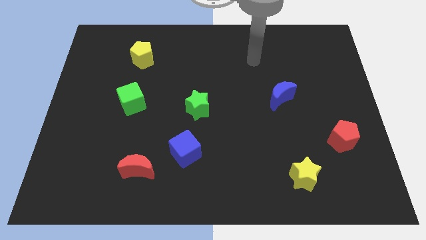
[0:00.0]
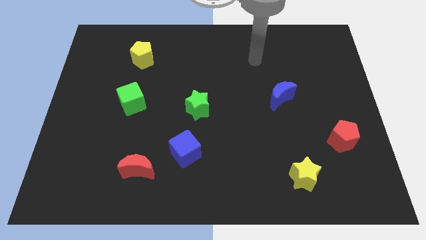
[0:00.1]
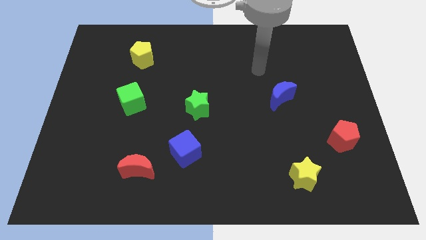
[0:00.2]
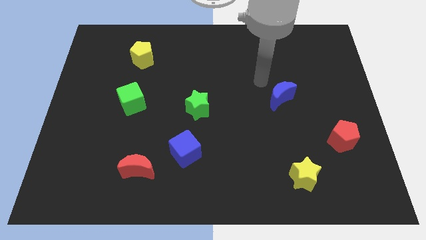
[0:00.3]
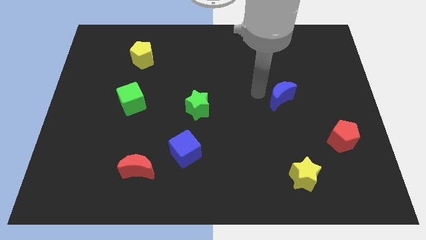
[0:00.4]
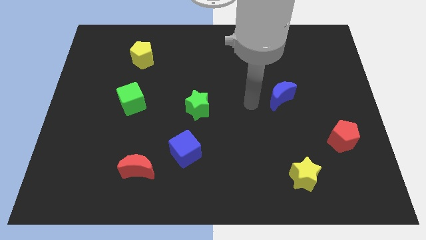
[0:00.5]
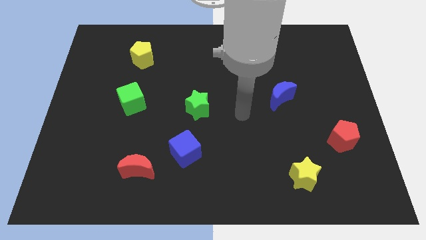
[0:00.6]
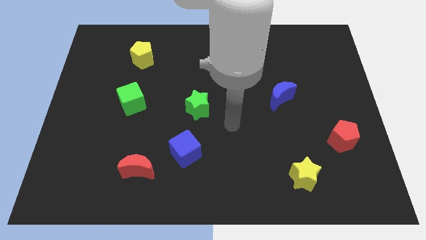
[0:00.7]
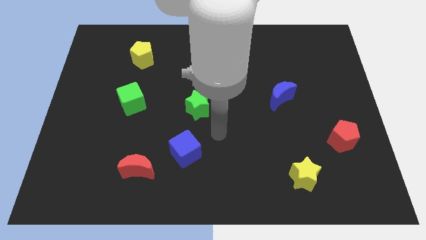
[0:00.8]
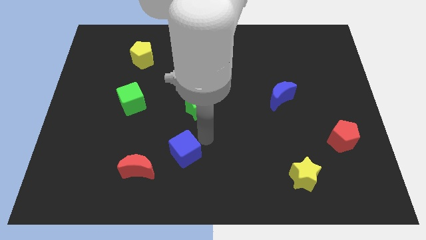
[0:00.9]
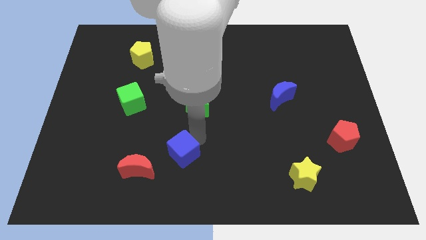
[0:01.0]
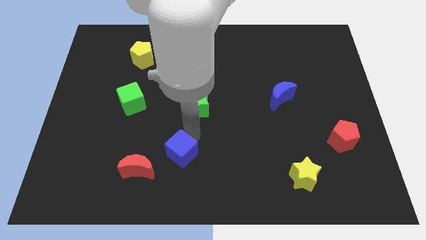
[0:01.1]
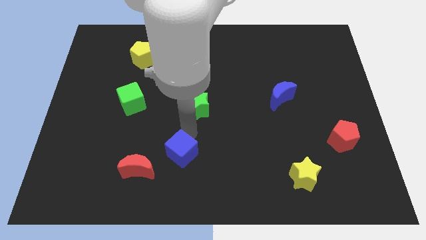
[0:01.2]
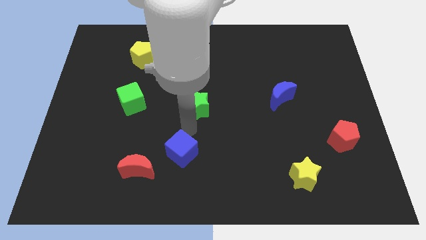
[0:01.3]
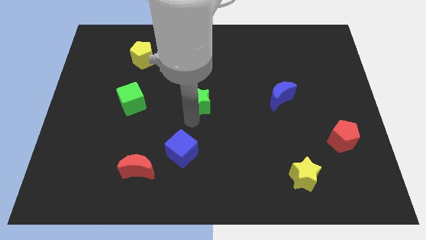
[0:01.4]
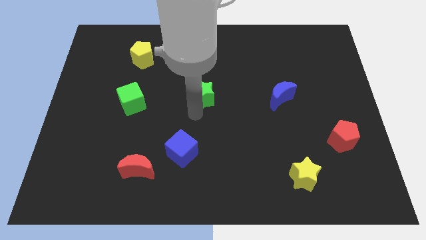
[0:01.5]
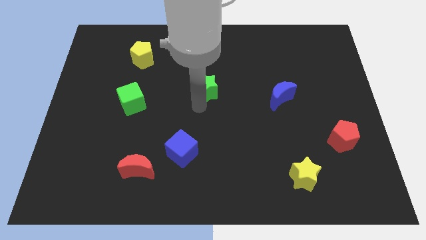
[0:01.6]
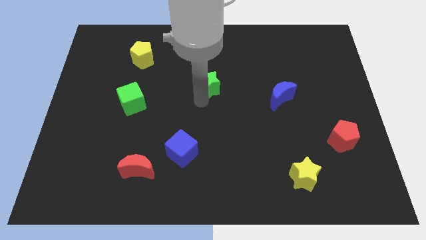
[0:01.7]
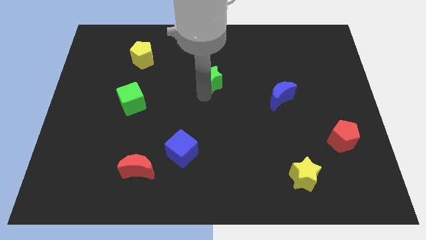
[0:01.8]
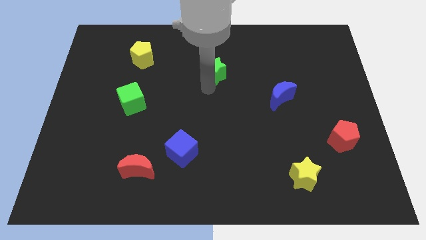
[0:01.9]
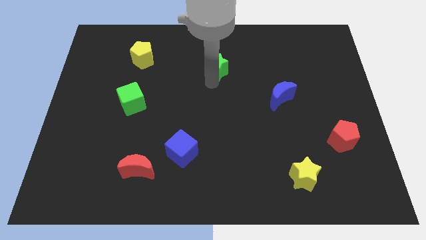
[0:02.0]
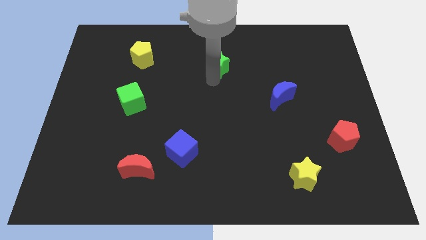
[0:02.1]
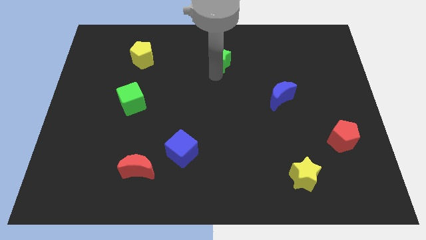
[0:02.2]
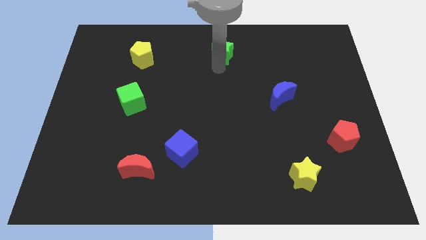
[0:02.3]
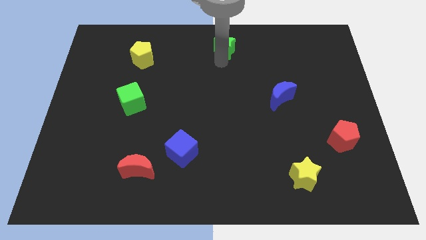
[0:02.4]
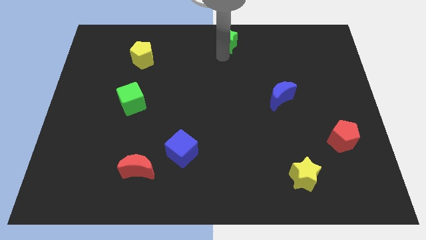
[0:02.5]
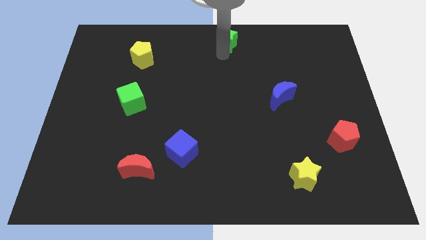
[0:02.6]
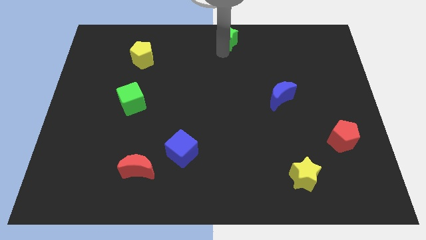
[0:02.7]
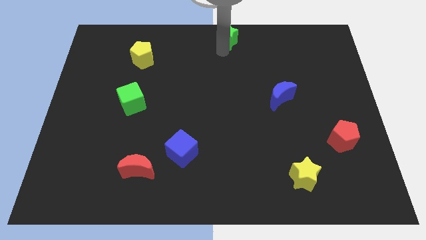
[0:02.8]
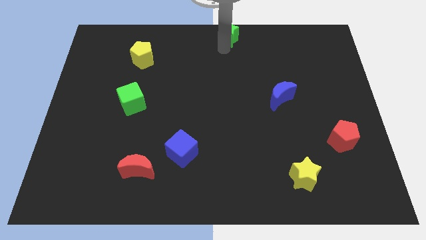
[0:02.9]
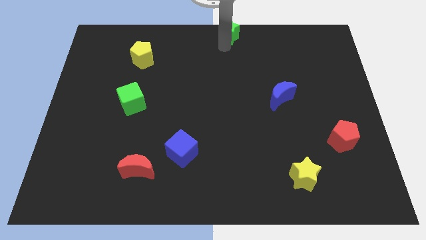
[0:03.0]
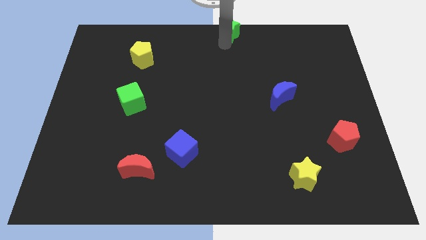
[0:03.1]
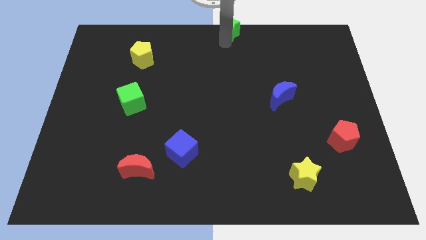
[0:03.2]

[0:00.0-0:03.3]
push green star to the top center of the board

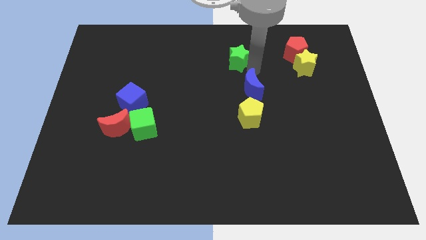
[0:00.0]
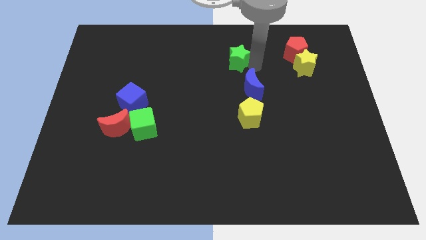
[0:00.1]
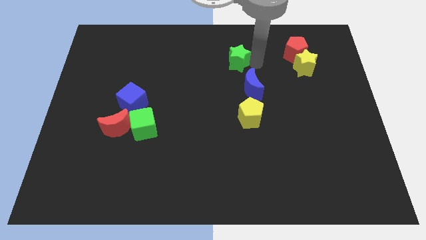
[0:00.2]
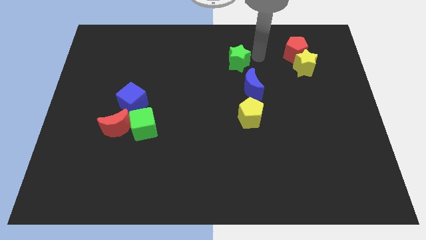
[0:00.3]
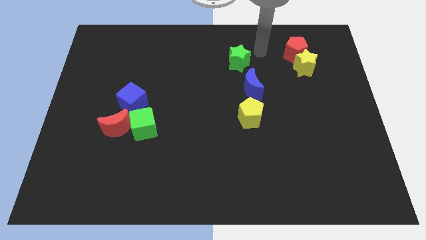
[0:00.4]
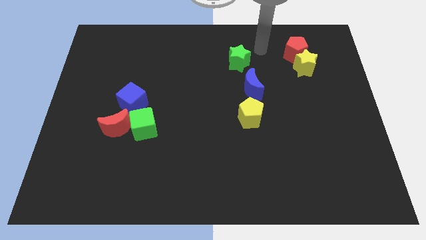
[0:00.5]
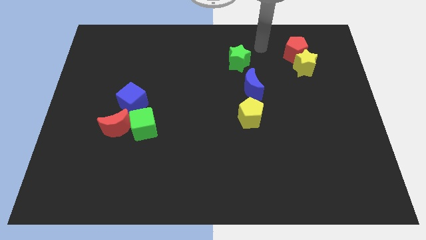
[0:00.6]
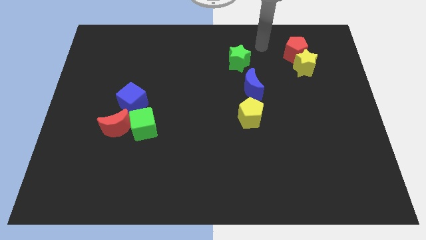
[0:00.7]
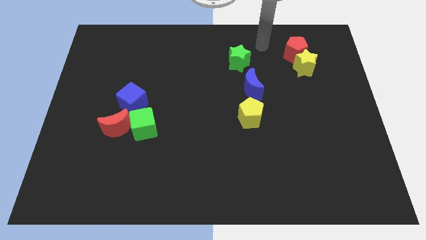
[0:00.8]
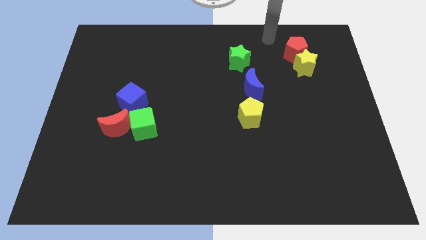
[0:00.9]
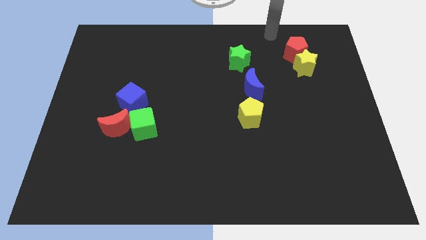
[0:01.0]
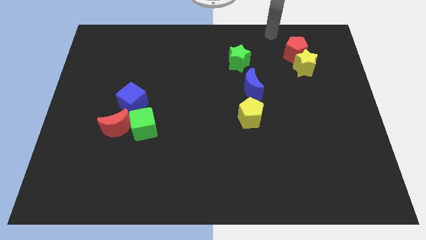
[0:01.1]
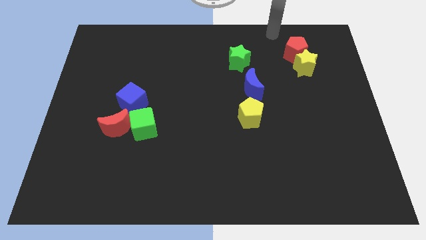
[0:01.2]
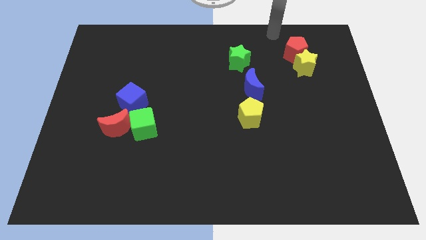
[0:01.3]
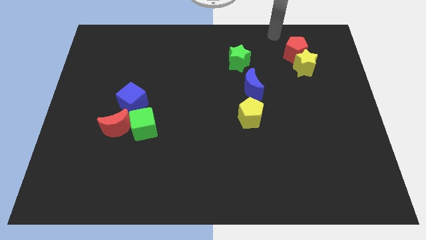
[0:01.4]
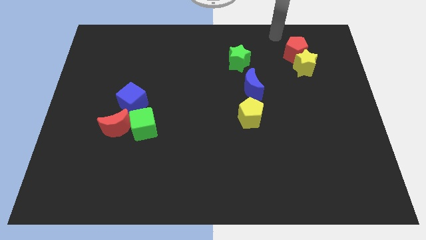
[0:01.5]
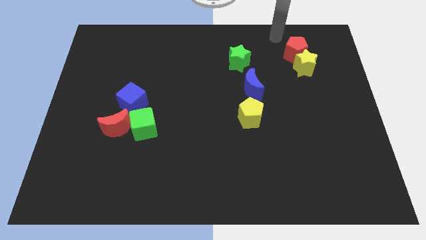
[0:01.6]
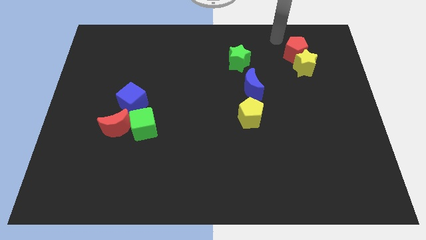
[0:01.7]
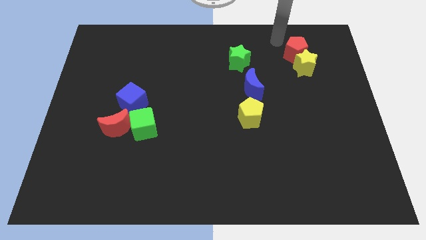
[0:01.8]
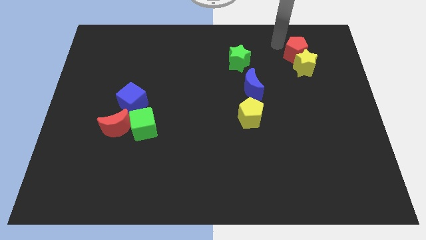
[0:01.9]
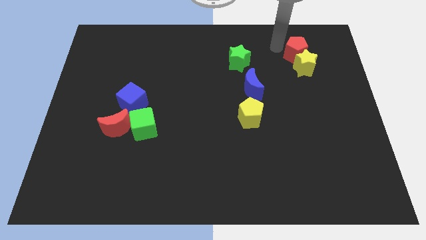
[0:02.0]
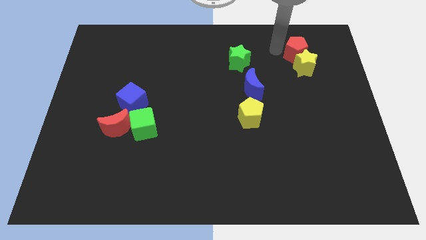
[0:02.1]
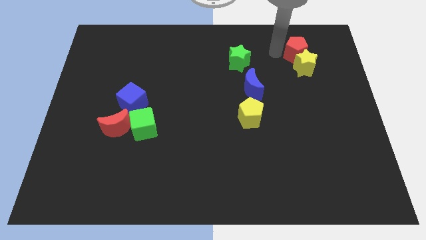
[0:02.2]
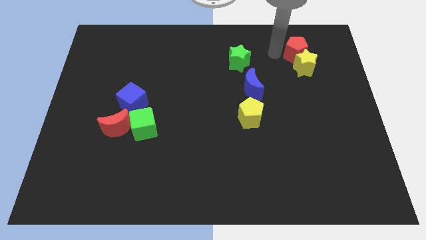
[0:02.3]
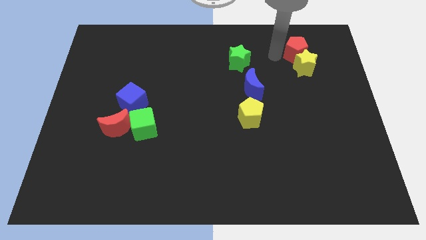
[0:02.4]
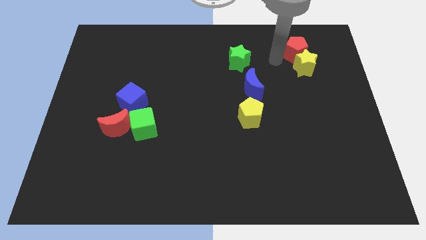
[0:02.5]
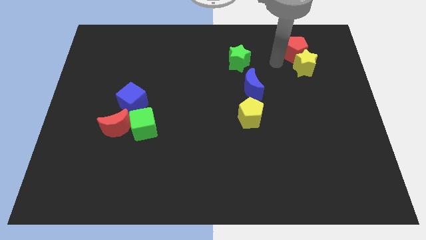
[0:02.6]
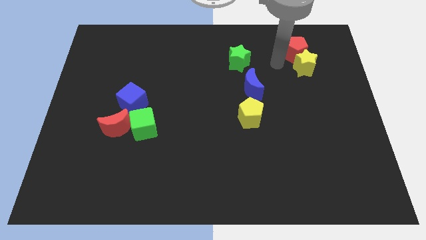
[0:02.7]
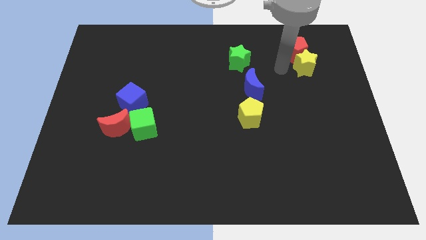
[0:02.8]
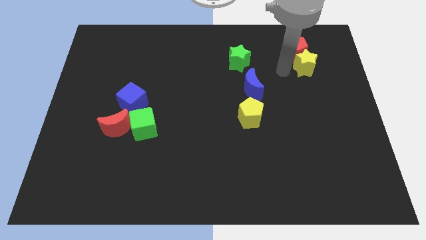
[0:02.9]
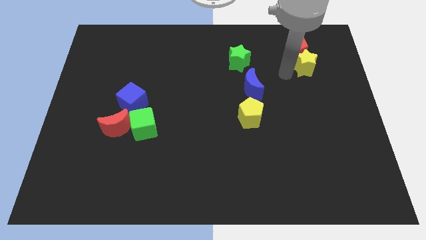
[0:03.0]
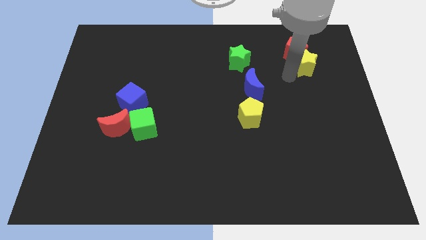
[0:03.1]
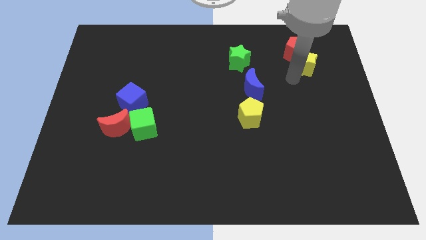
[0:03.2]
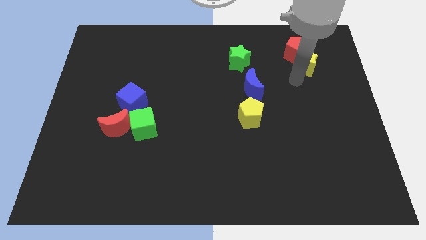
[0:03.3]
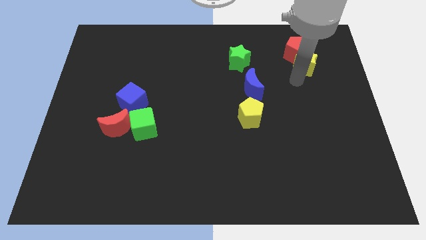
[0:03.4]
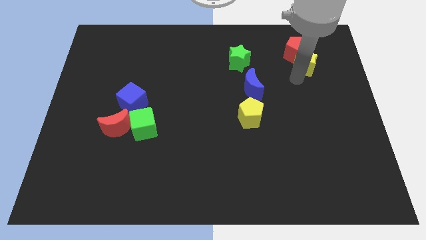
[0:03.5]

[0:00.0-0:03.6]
place your hand at the bottom left of the yellow star

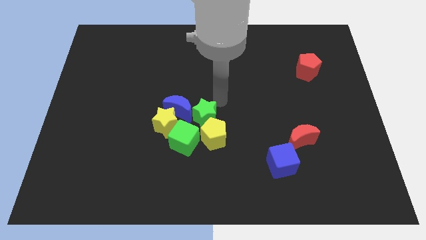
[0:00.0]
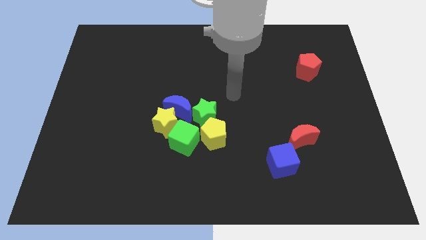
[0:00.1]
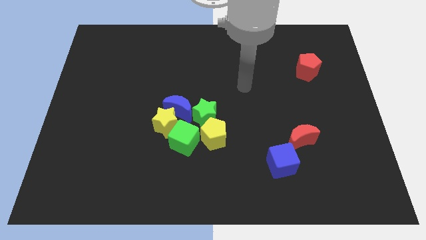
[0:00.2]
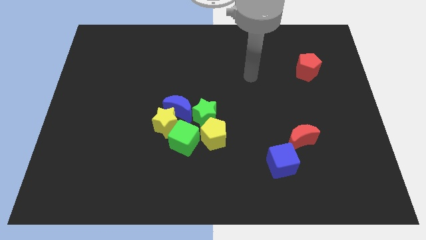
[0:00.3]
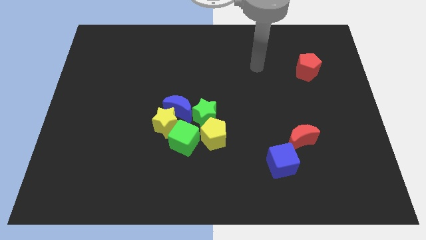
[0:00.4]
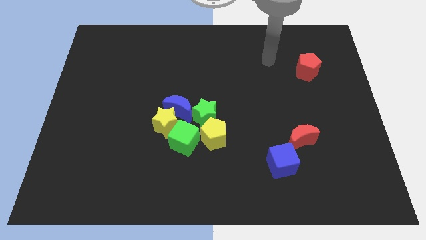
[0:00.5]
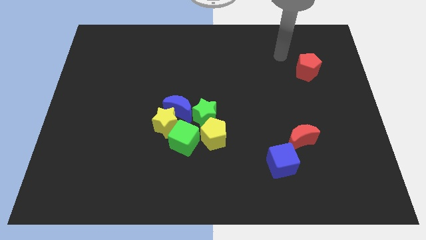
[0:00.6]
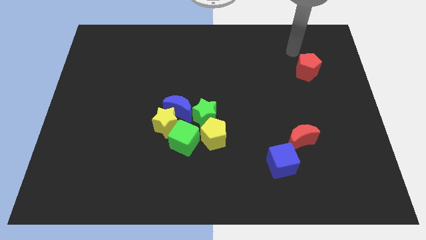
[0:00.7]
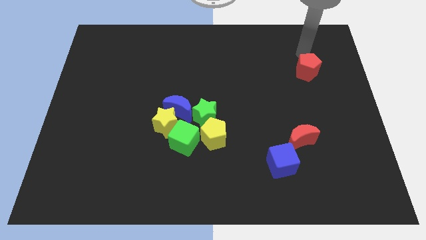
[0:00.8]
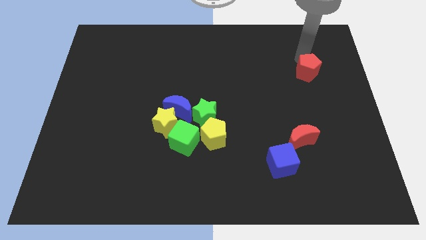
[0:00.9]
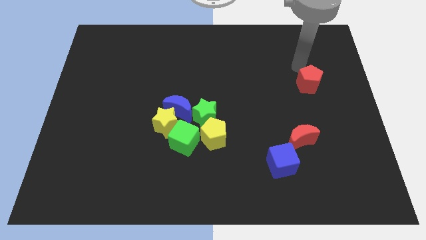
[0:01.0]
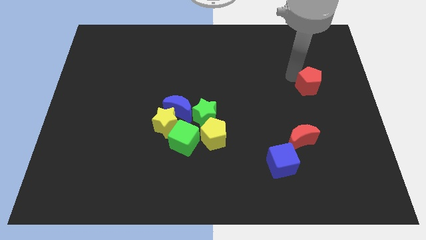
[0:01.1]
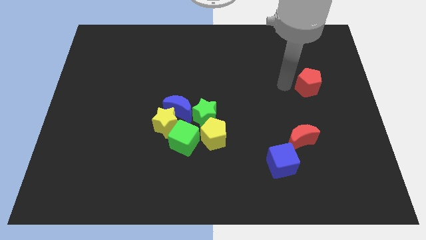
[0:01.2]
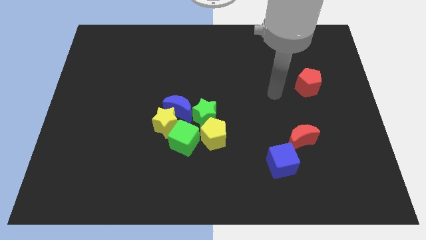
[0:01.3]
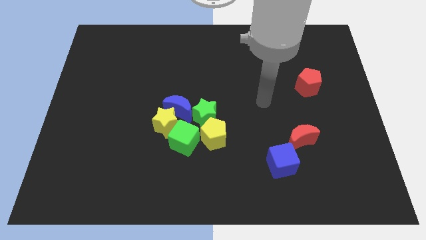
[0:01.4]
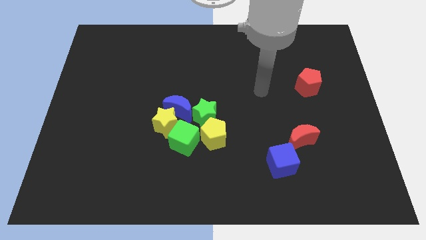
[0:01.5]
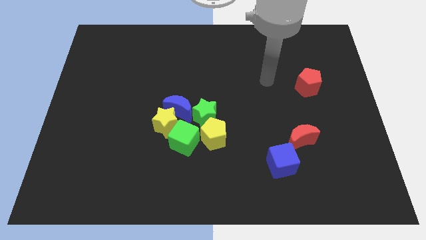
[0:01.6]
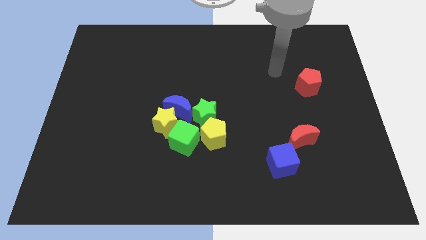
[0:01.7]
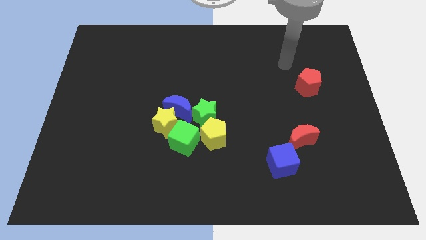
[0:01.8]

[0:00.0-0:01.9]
move the red pentagon slightly to the down

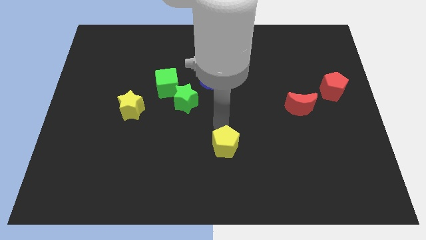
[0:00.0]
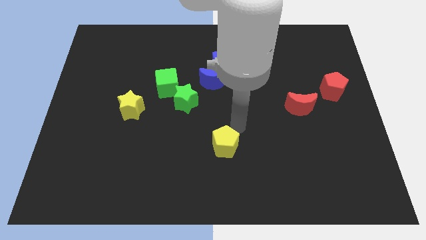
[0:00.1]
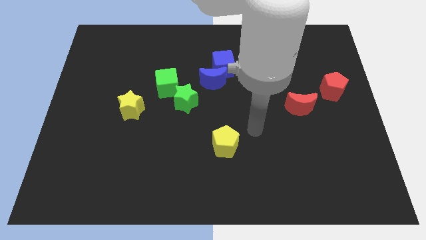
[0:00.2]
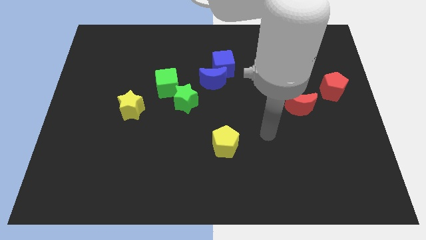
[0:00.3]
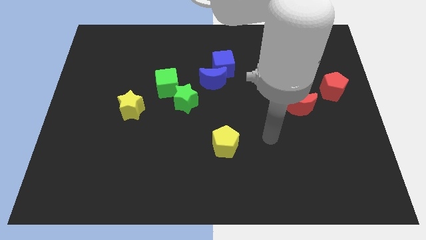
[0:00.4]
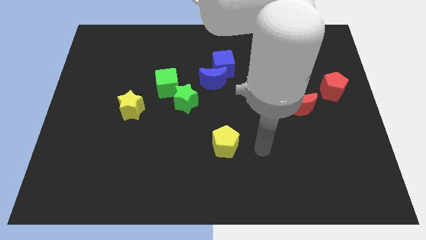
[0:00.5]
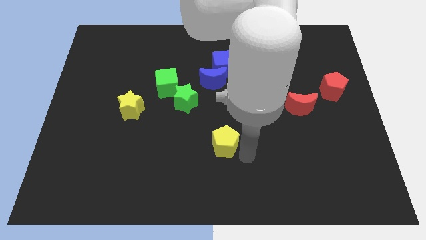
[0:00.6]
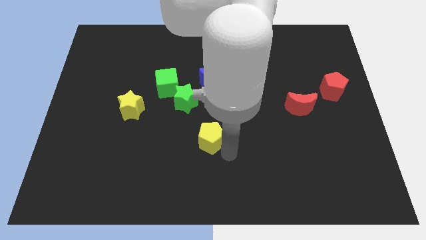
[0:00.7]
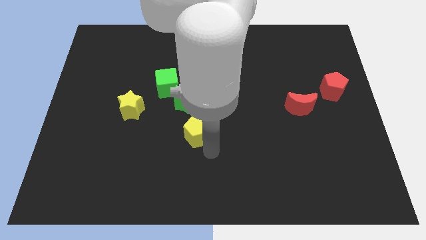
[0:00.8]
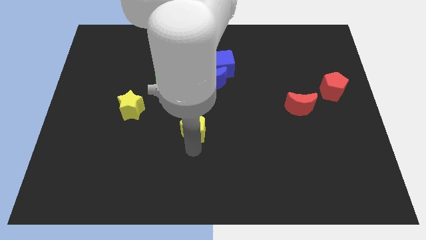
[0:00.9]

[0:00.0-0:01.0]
put yellow pentagon towards the green star
